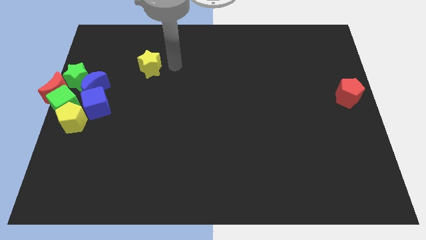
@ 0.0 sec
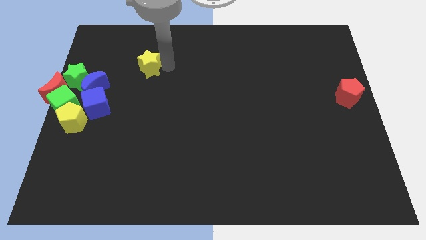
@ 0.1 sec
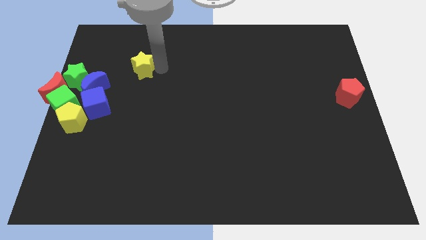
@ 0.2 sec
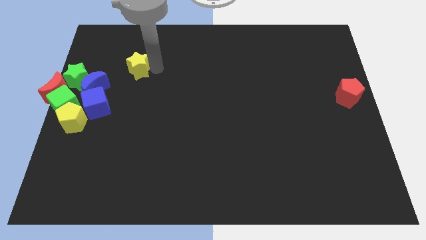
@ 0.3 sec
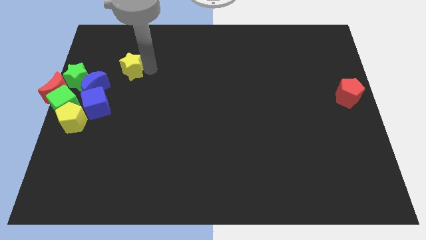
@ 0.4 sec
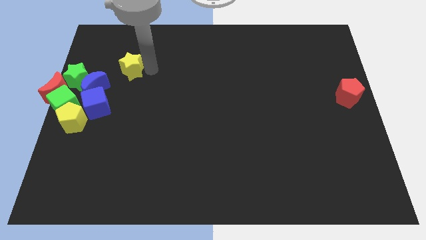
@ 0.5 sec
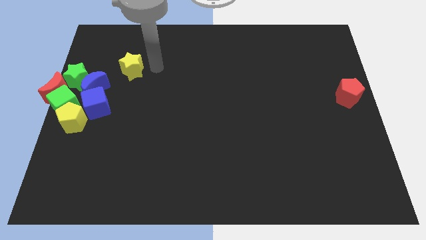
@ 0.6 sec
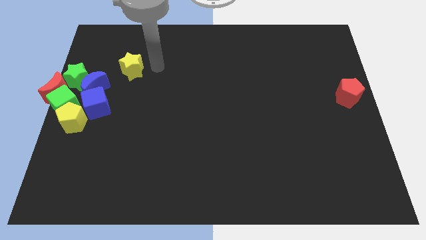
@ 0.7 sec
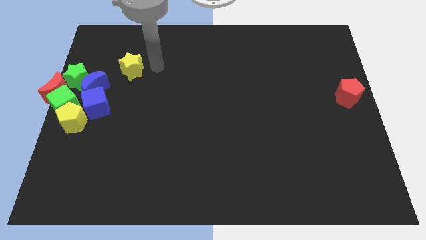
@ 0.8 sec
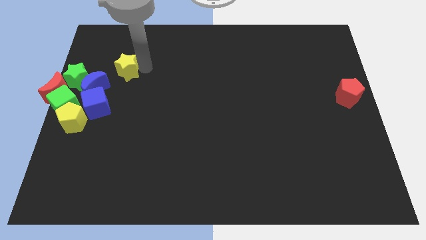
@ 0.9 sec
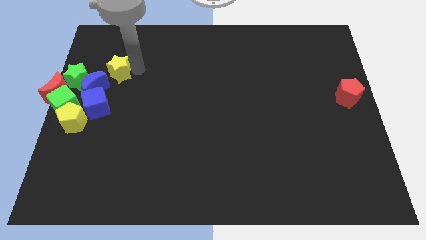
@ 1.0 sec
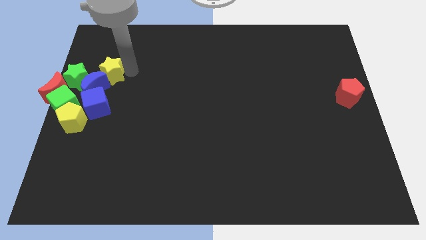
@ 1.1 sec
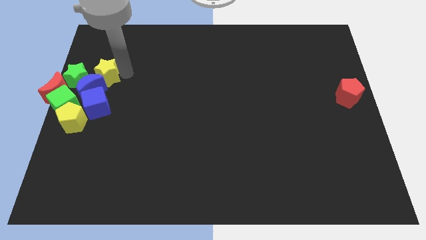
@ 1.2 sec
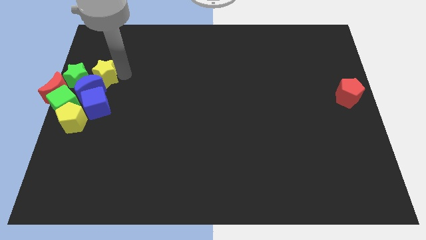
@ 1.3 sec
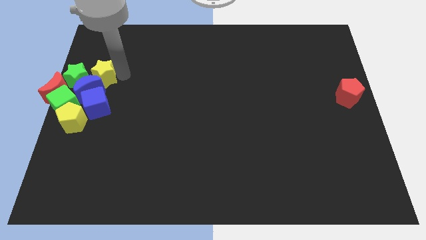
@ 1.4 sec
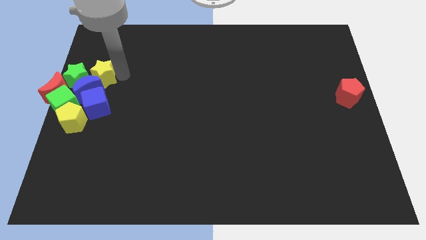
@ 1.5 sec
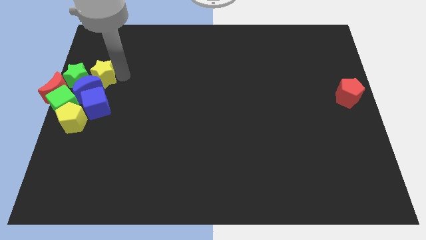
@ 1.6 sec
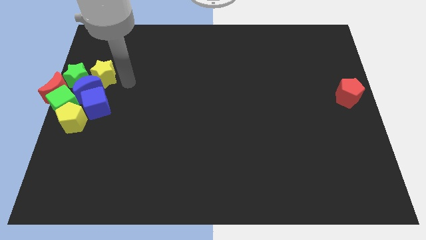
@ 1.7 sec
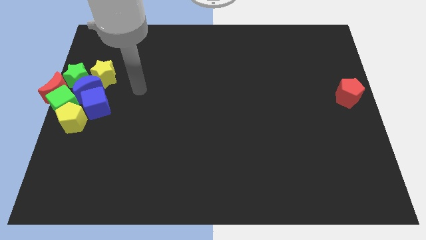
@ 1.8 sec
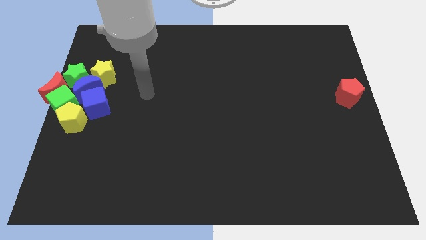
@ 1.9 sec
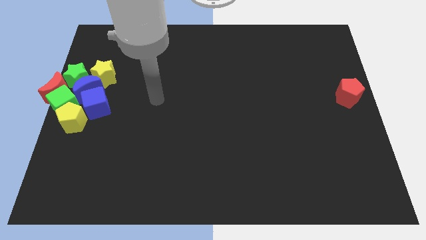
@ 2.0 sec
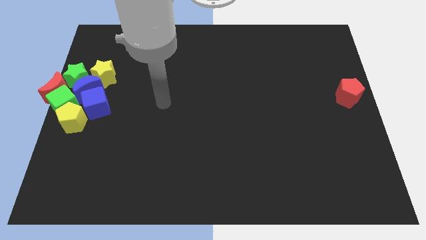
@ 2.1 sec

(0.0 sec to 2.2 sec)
add the yellow star into the group of blocks

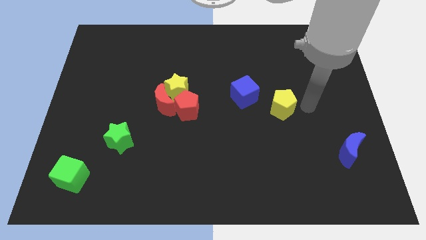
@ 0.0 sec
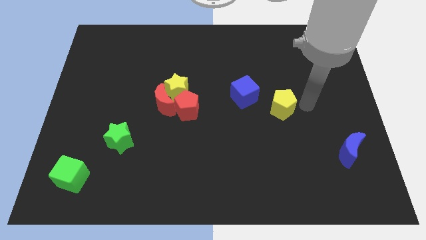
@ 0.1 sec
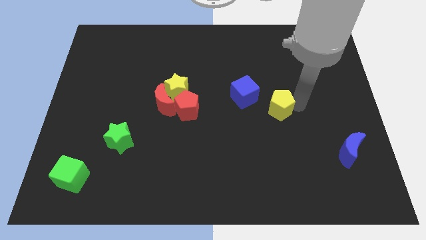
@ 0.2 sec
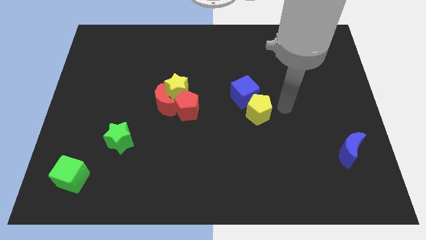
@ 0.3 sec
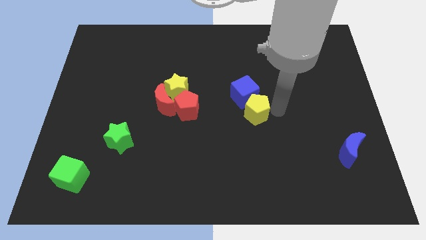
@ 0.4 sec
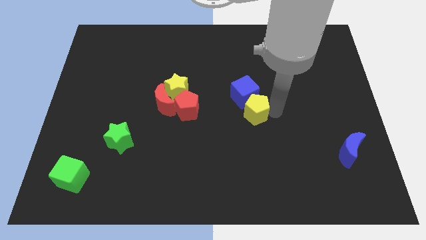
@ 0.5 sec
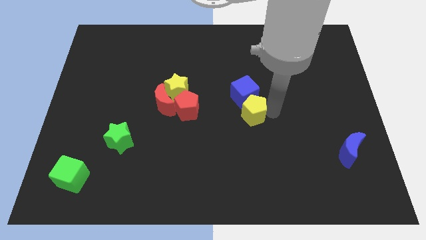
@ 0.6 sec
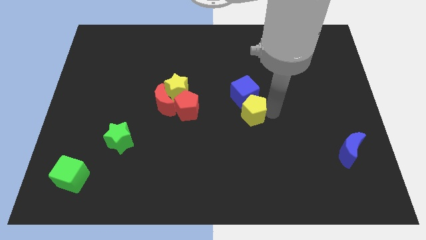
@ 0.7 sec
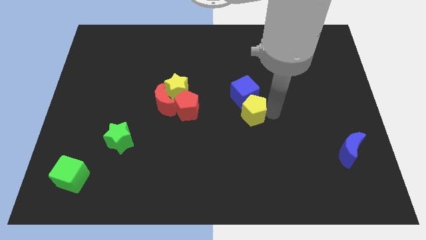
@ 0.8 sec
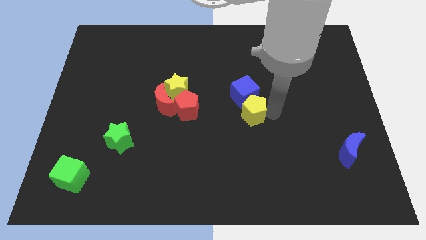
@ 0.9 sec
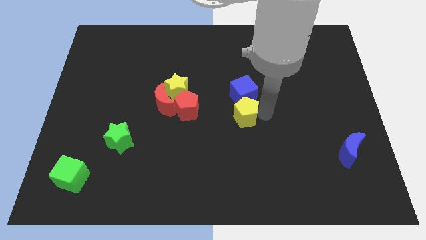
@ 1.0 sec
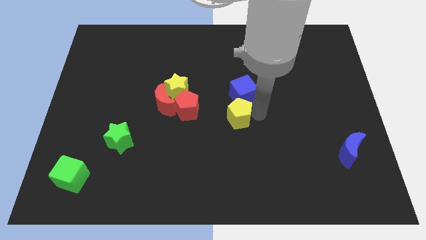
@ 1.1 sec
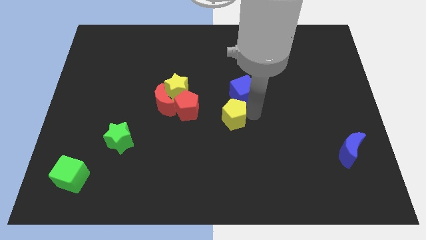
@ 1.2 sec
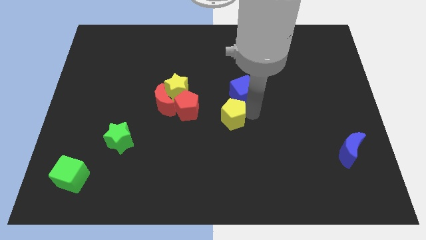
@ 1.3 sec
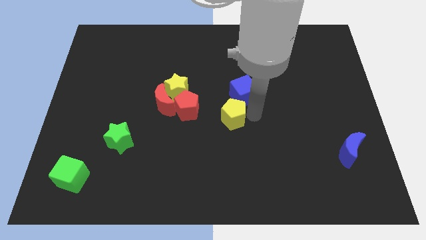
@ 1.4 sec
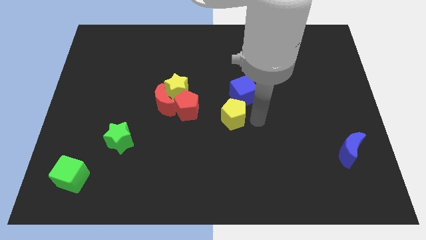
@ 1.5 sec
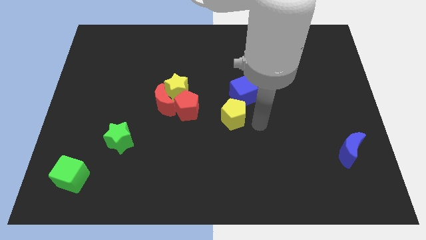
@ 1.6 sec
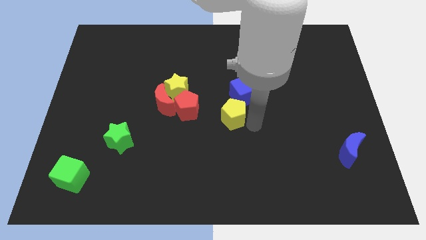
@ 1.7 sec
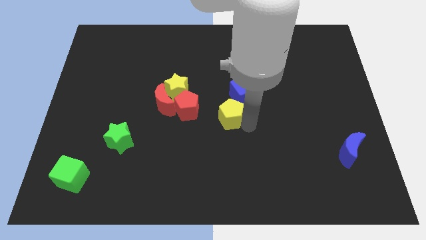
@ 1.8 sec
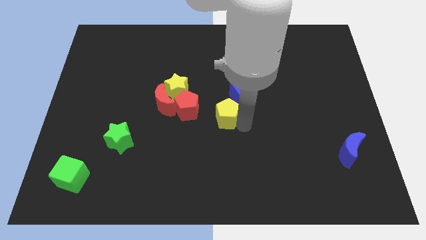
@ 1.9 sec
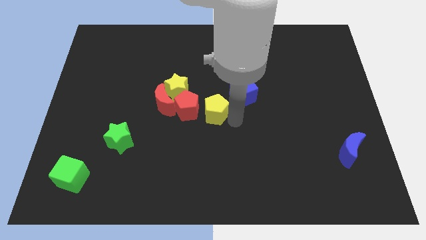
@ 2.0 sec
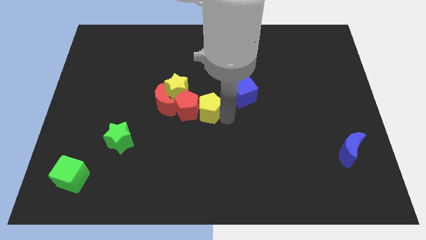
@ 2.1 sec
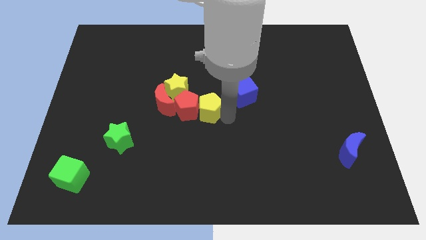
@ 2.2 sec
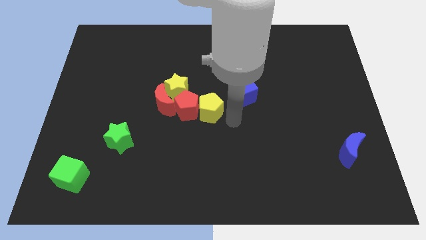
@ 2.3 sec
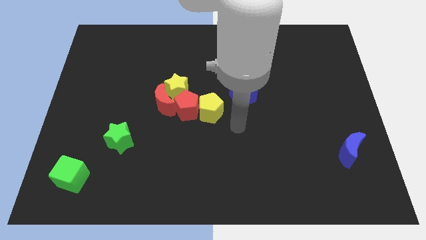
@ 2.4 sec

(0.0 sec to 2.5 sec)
place the yellow pentagon into red pentagon to the right

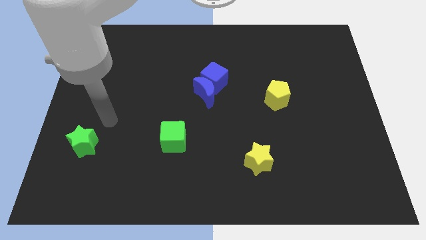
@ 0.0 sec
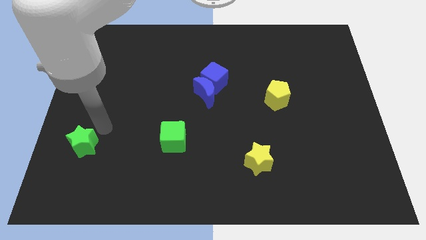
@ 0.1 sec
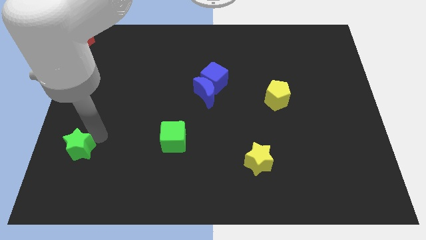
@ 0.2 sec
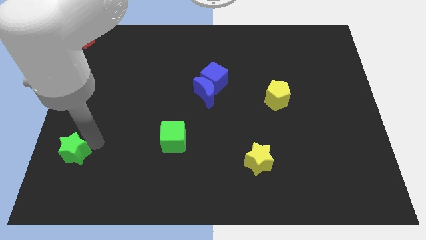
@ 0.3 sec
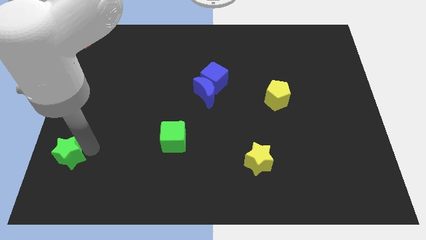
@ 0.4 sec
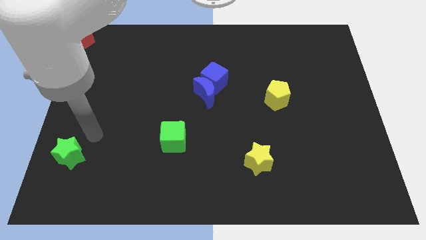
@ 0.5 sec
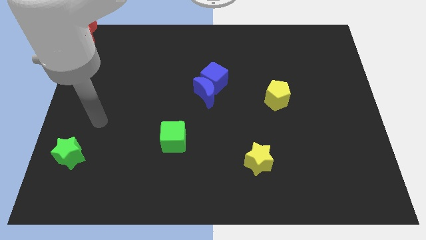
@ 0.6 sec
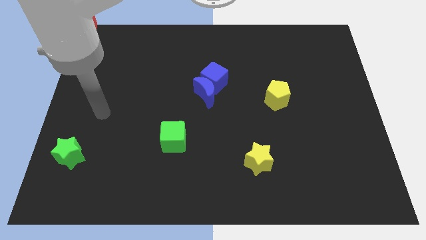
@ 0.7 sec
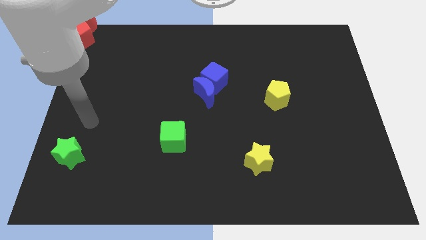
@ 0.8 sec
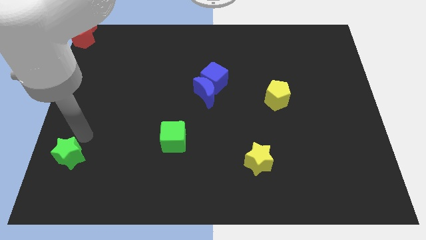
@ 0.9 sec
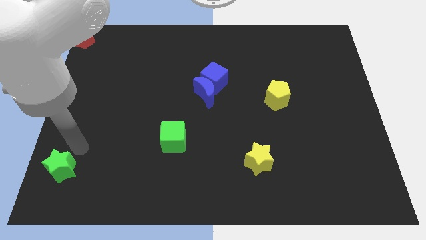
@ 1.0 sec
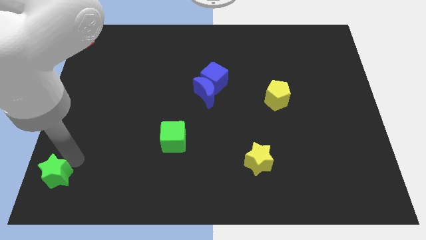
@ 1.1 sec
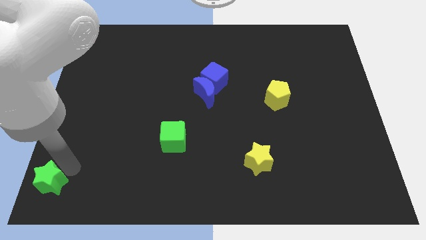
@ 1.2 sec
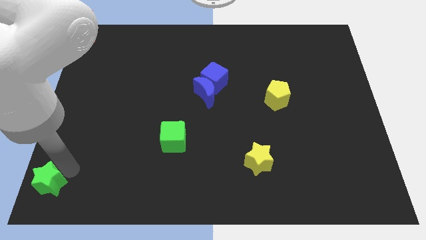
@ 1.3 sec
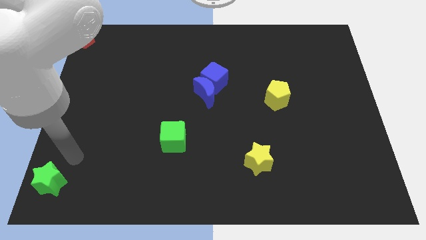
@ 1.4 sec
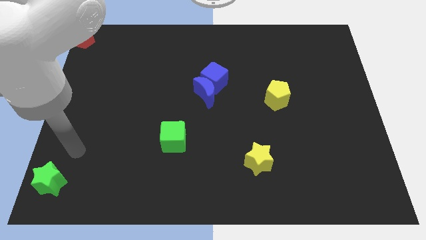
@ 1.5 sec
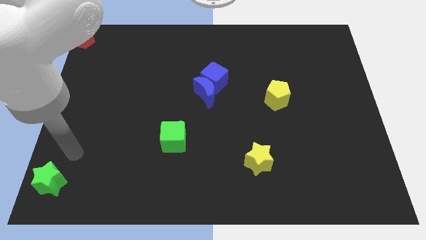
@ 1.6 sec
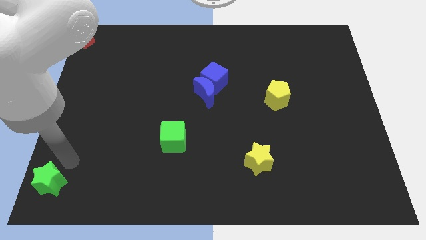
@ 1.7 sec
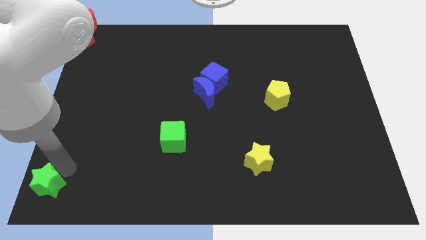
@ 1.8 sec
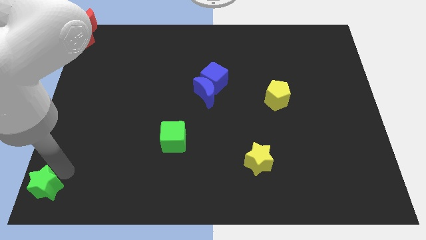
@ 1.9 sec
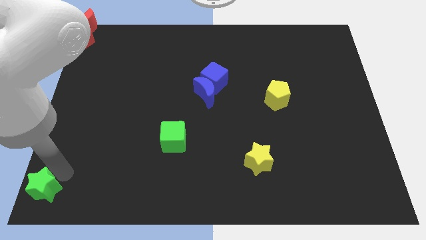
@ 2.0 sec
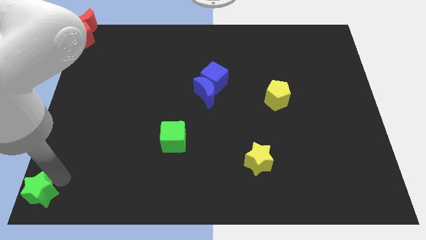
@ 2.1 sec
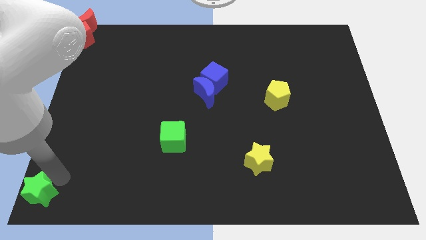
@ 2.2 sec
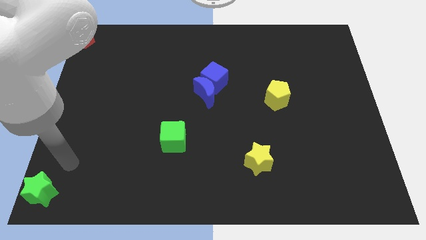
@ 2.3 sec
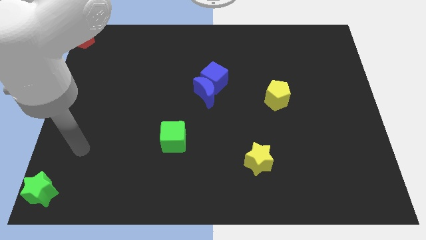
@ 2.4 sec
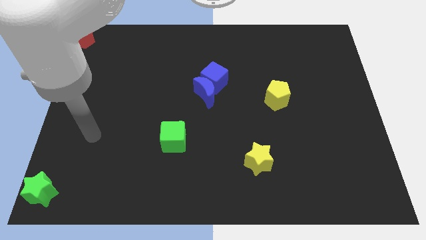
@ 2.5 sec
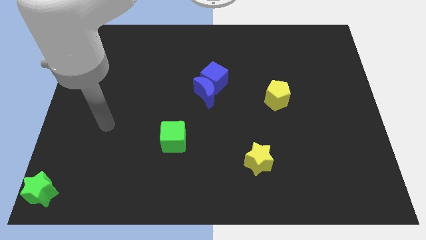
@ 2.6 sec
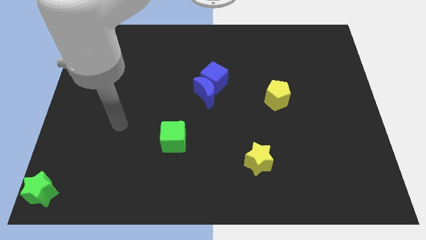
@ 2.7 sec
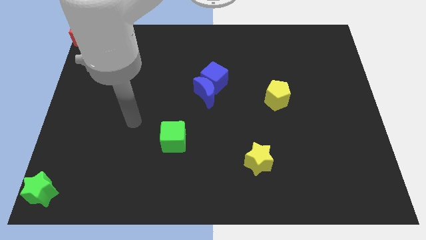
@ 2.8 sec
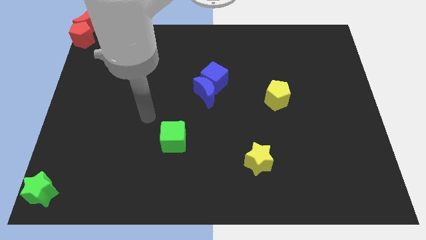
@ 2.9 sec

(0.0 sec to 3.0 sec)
slide the green star to the bottom left corner of the board

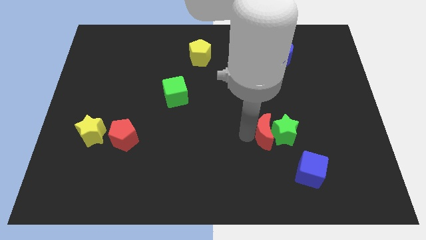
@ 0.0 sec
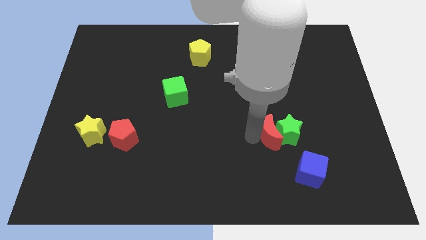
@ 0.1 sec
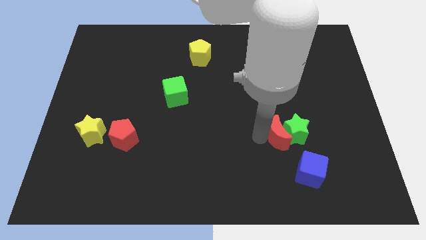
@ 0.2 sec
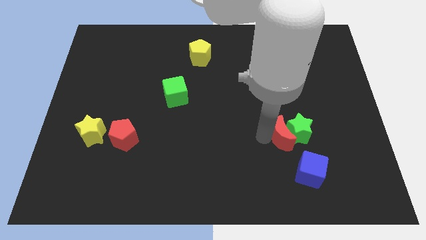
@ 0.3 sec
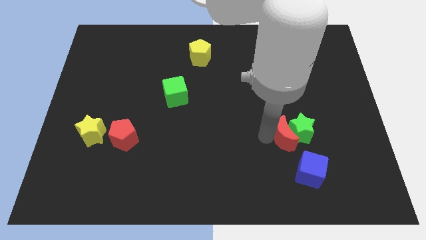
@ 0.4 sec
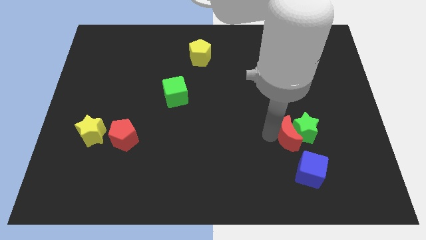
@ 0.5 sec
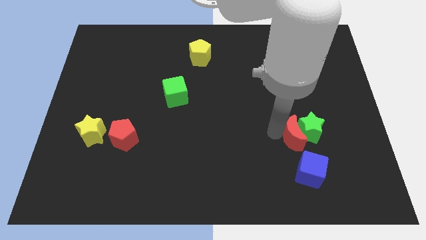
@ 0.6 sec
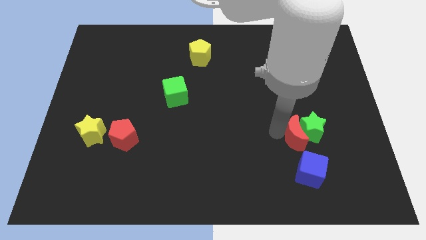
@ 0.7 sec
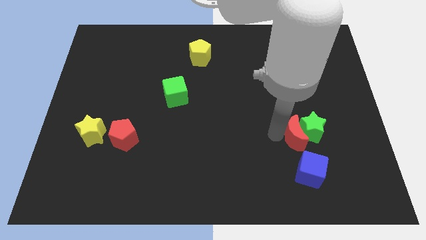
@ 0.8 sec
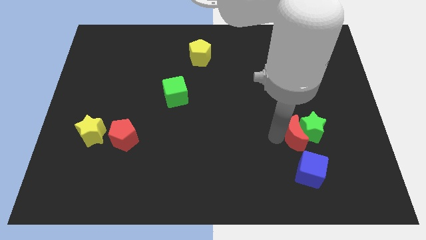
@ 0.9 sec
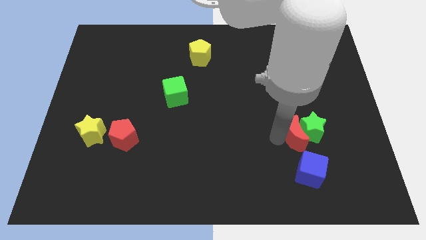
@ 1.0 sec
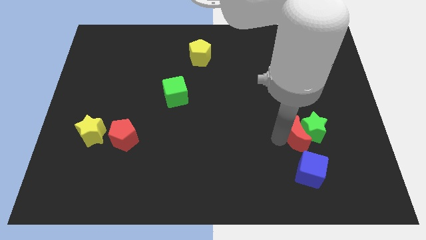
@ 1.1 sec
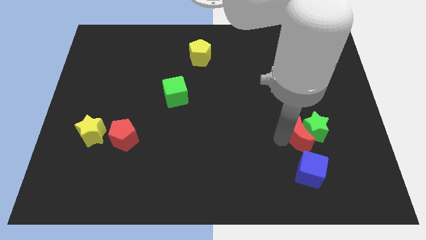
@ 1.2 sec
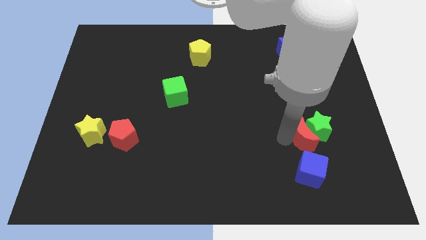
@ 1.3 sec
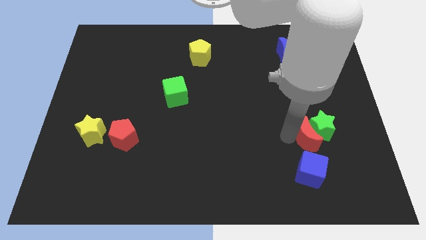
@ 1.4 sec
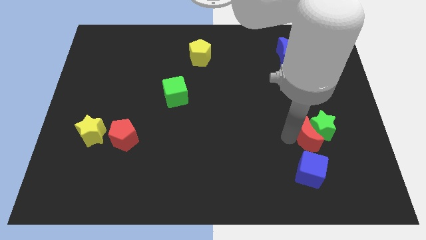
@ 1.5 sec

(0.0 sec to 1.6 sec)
push the red crescent and green star to the top side of the blue cube
